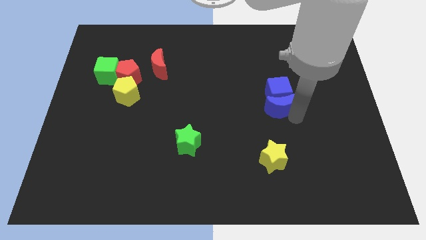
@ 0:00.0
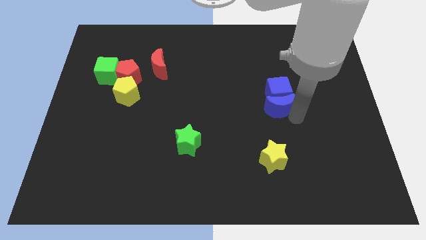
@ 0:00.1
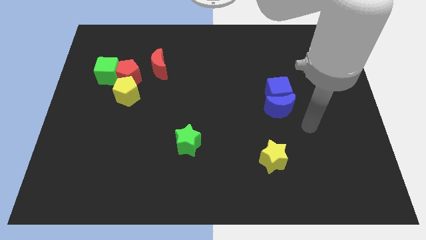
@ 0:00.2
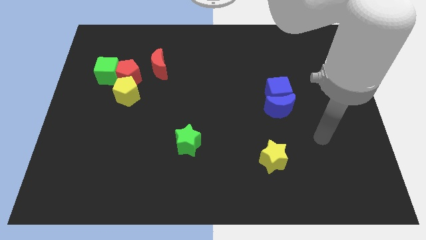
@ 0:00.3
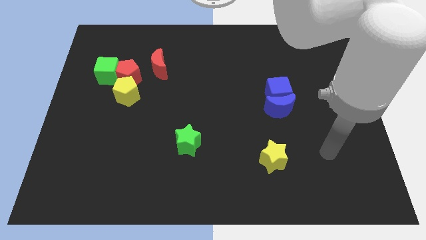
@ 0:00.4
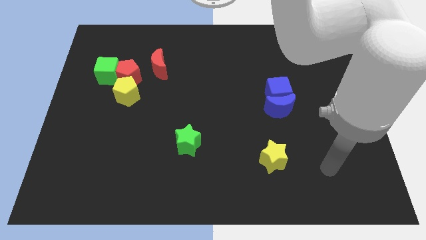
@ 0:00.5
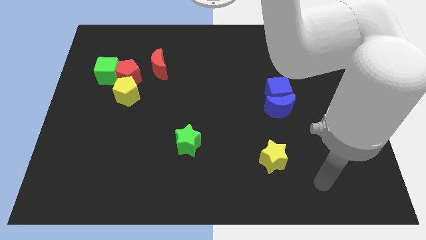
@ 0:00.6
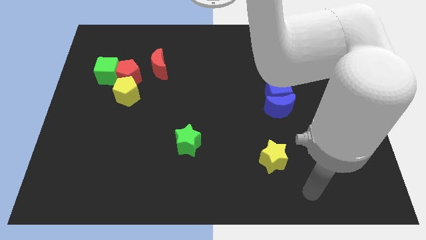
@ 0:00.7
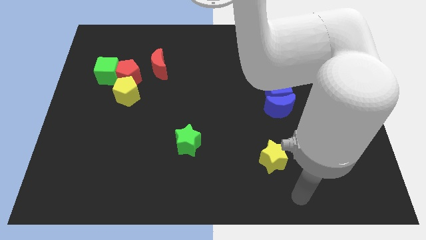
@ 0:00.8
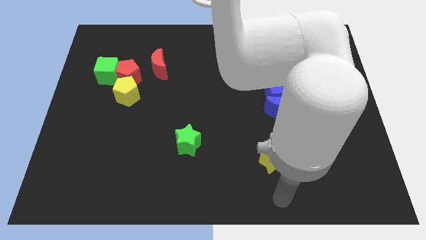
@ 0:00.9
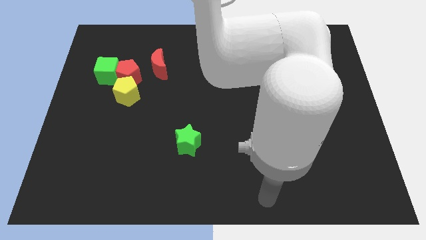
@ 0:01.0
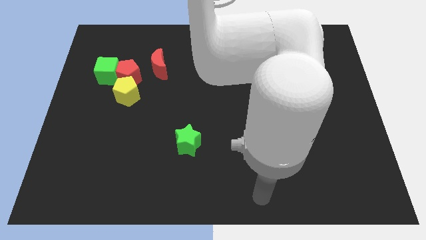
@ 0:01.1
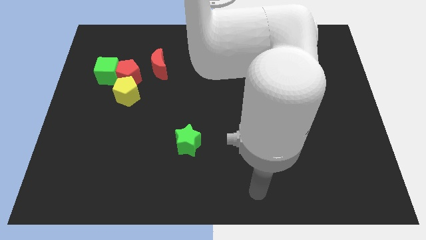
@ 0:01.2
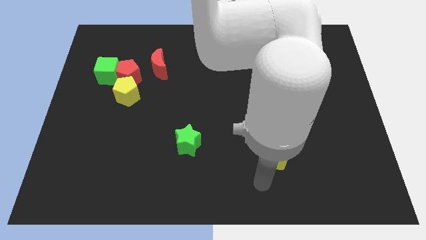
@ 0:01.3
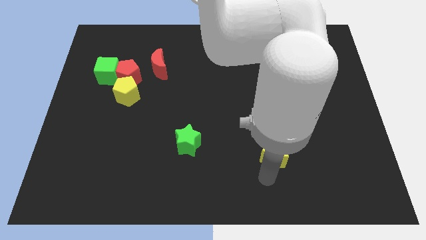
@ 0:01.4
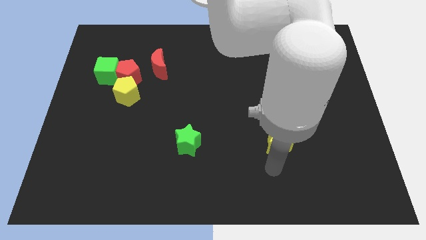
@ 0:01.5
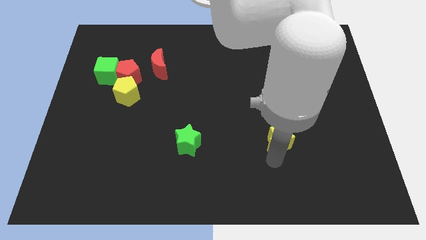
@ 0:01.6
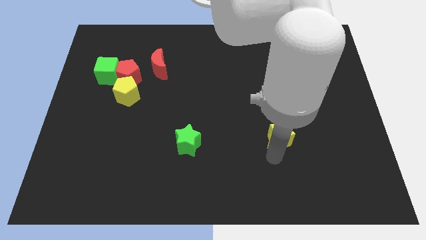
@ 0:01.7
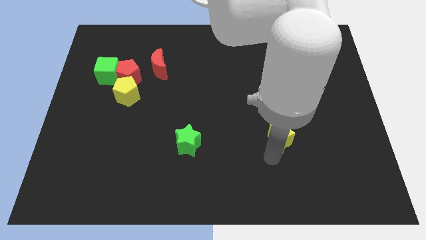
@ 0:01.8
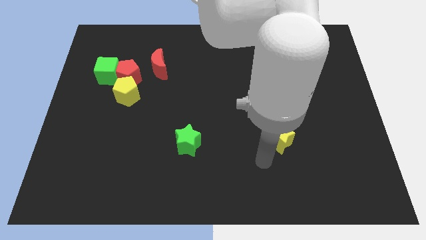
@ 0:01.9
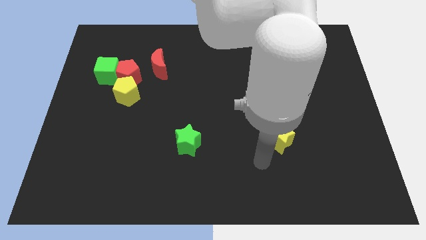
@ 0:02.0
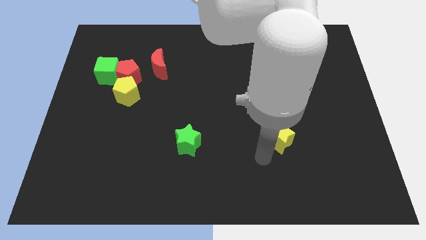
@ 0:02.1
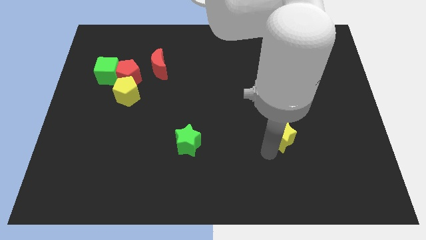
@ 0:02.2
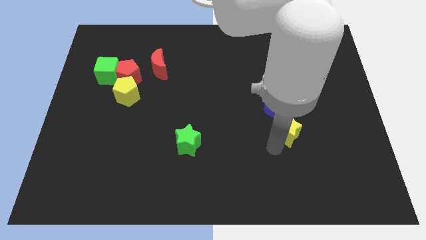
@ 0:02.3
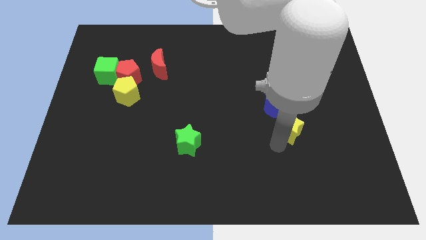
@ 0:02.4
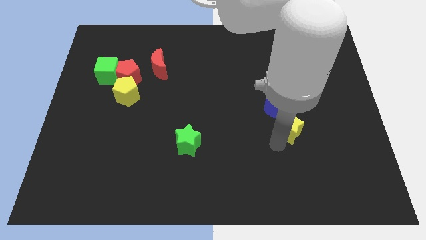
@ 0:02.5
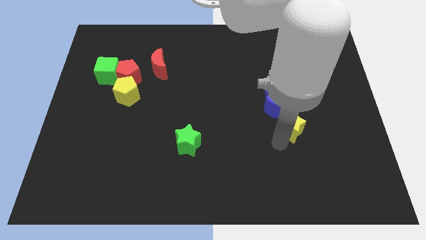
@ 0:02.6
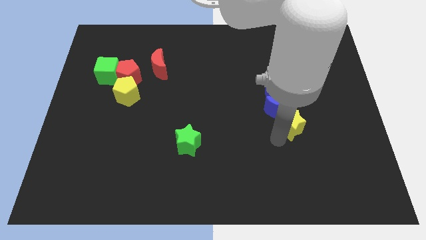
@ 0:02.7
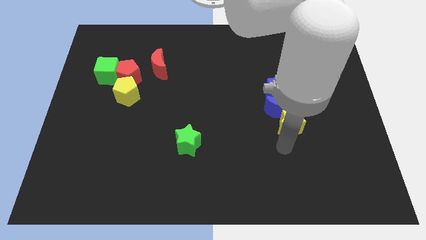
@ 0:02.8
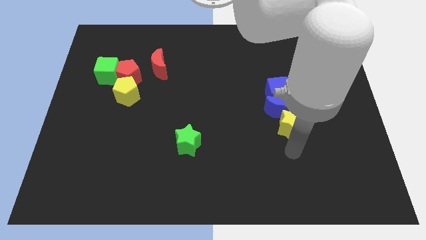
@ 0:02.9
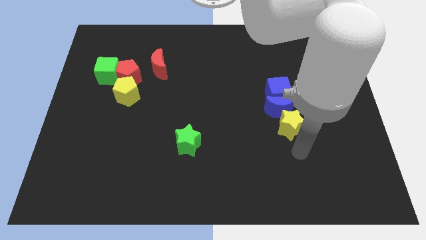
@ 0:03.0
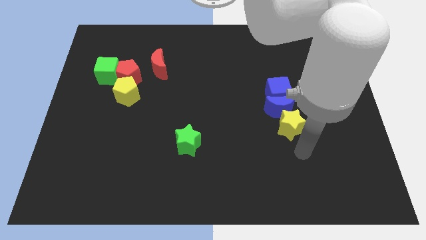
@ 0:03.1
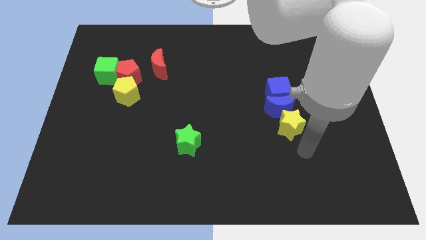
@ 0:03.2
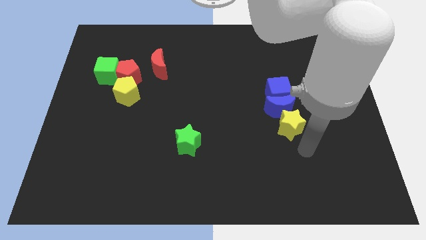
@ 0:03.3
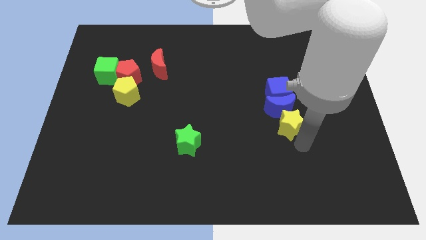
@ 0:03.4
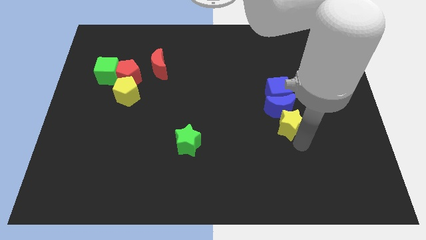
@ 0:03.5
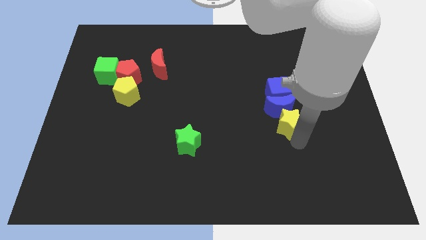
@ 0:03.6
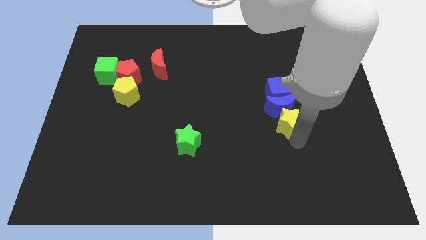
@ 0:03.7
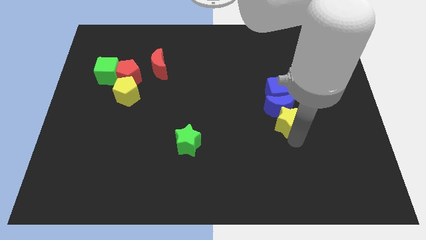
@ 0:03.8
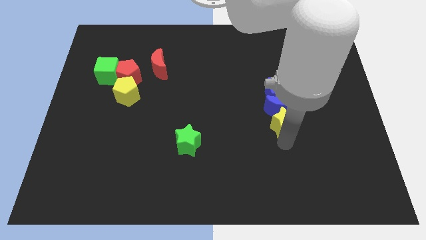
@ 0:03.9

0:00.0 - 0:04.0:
push the yellow star into the bottom side of the blue moon

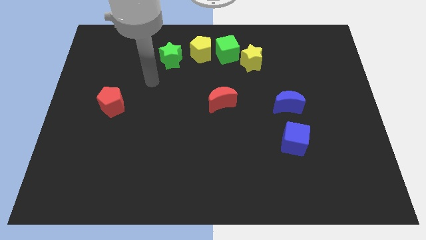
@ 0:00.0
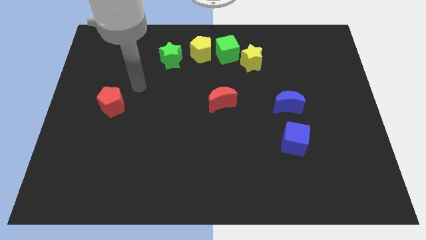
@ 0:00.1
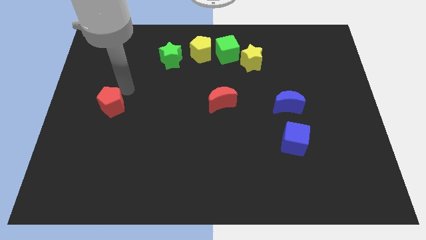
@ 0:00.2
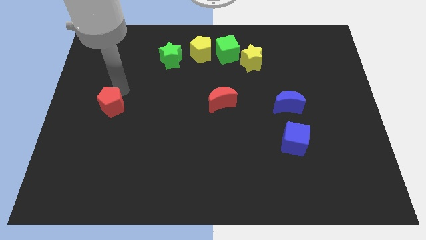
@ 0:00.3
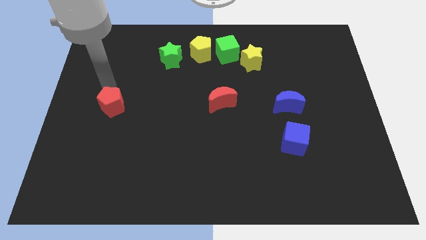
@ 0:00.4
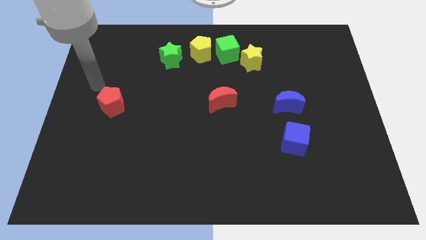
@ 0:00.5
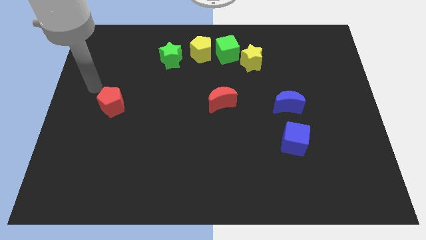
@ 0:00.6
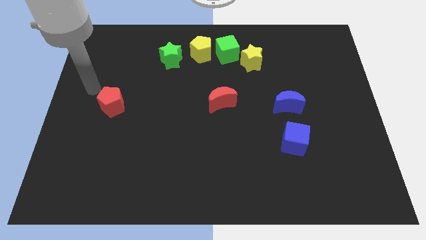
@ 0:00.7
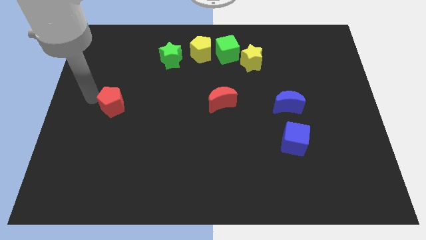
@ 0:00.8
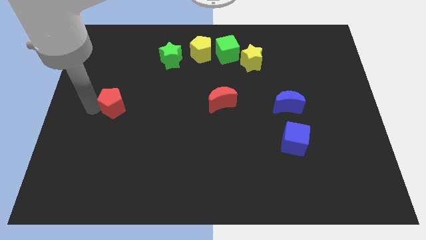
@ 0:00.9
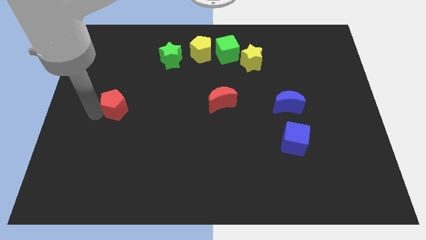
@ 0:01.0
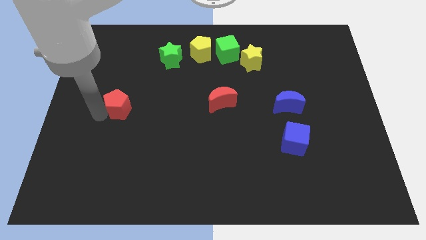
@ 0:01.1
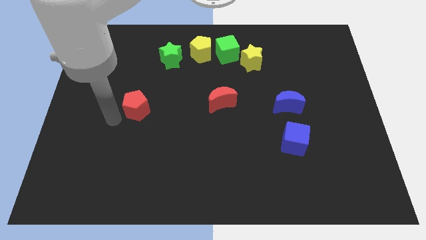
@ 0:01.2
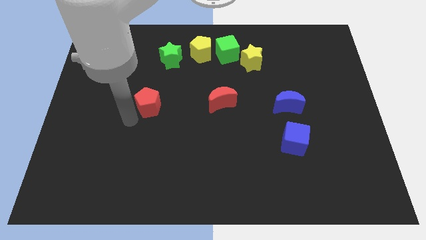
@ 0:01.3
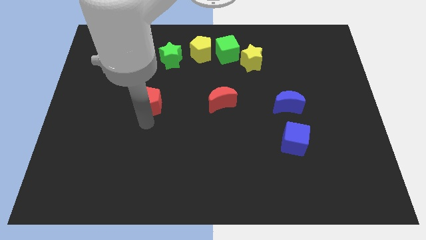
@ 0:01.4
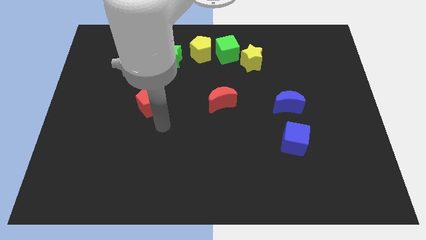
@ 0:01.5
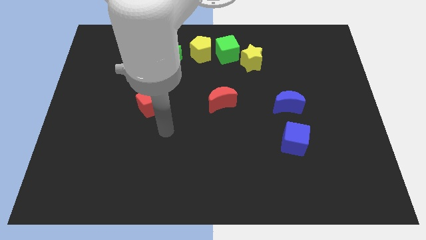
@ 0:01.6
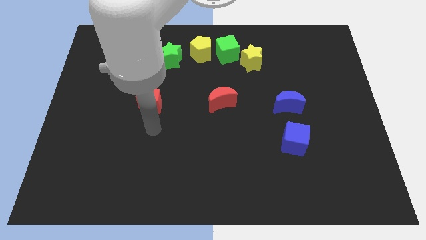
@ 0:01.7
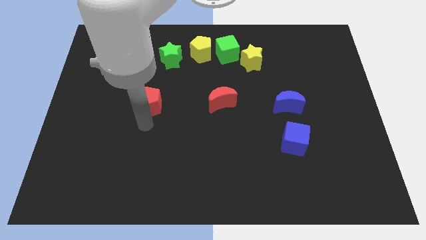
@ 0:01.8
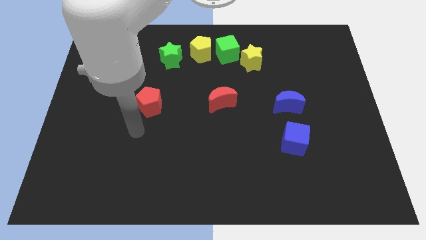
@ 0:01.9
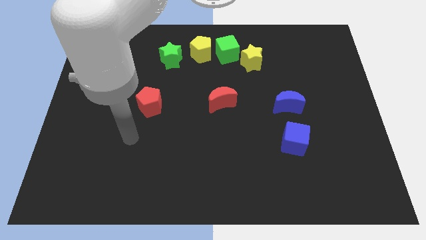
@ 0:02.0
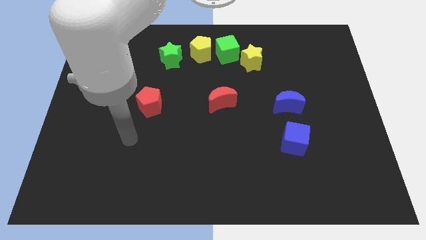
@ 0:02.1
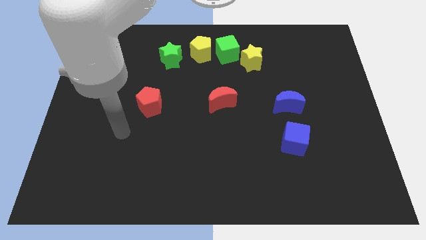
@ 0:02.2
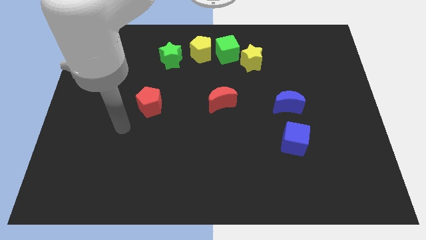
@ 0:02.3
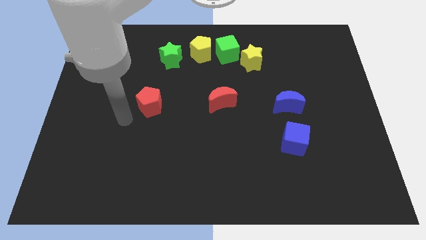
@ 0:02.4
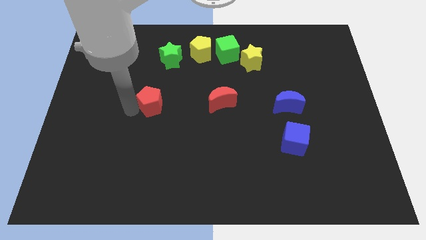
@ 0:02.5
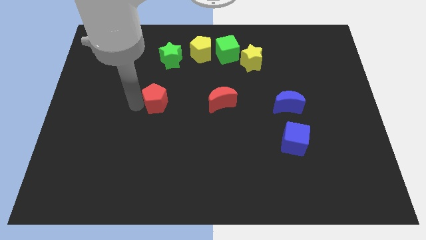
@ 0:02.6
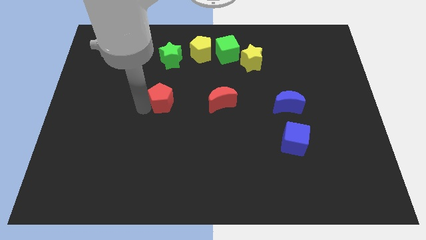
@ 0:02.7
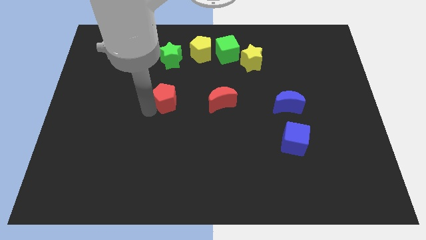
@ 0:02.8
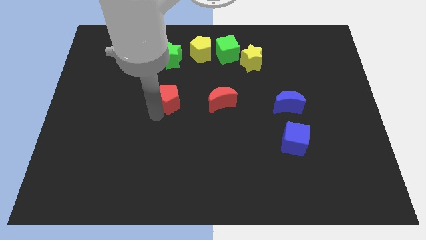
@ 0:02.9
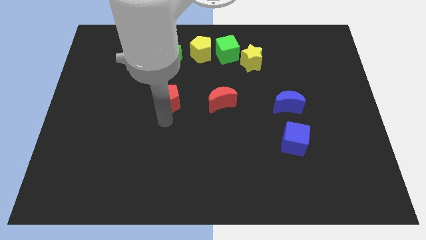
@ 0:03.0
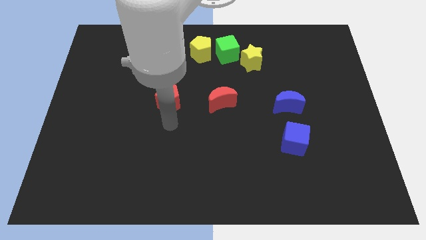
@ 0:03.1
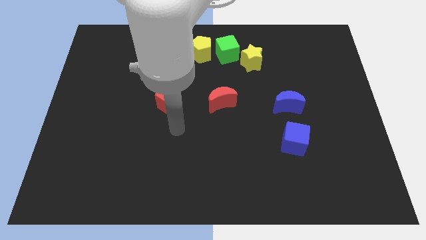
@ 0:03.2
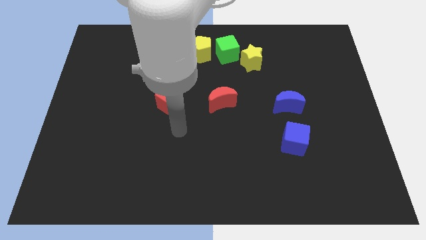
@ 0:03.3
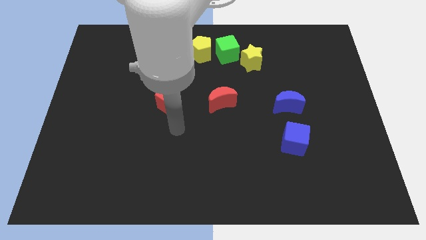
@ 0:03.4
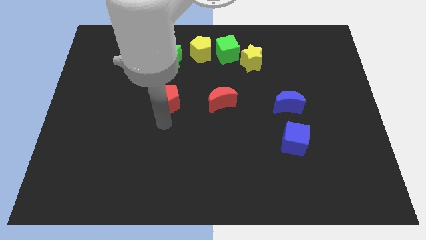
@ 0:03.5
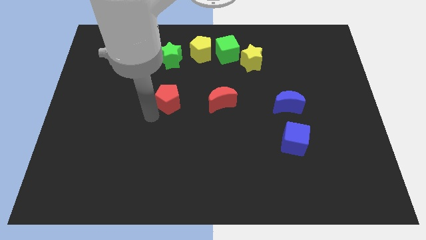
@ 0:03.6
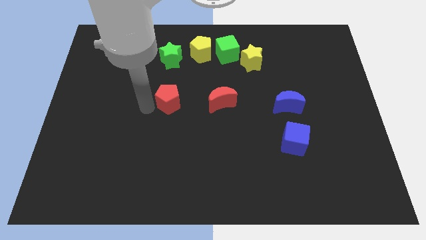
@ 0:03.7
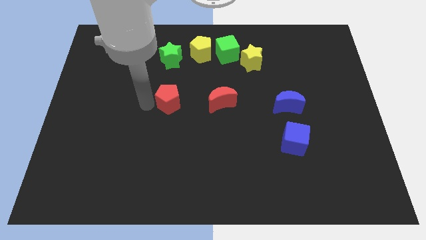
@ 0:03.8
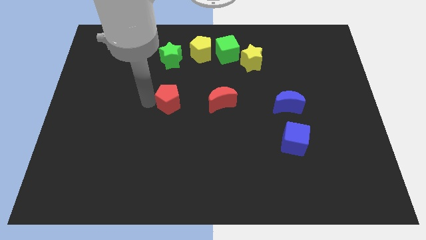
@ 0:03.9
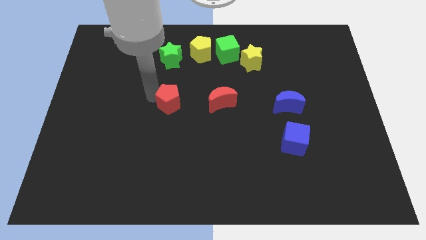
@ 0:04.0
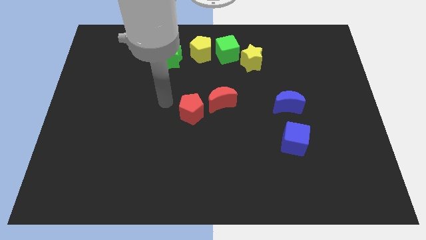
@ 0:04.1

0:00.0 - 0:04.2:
move the red pentagon to the left of the red crescent

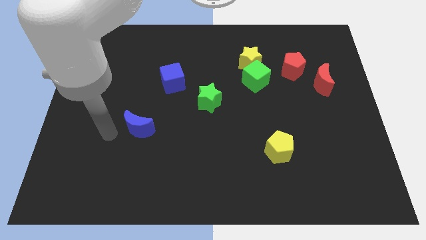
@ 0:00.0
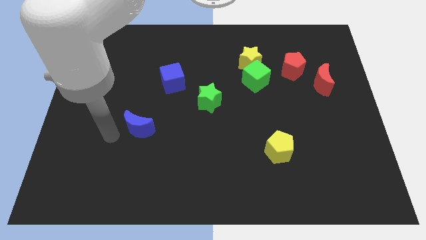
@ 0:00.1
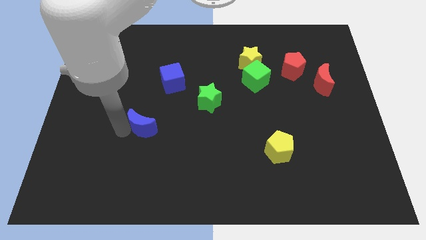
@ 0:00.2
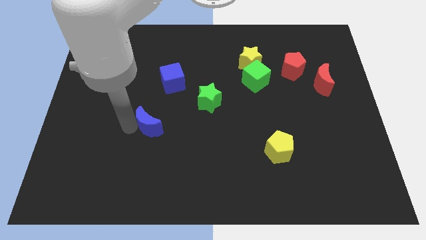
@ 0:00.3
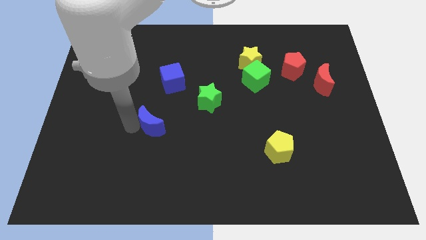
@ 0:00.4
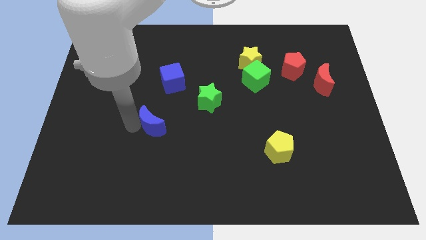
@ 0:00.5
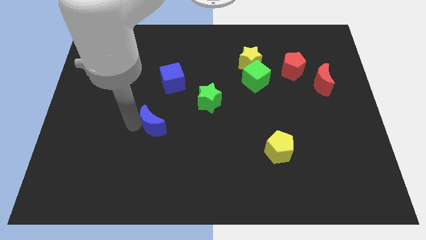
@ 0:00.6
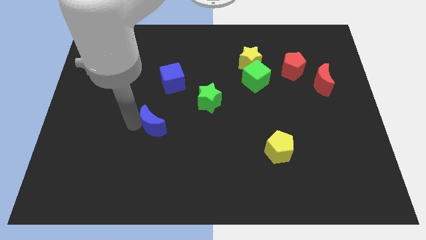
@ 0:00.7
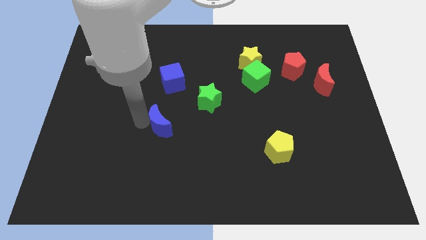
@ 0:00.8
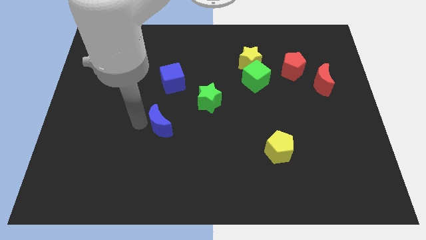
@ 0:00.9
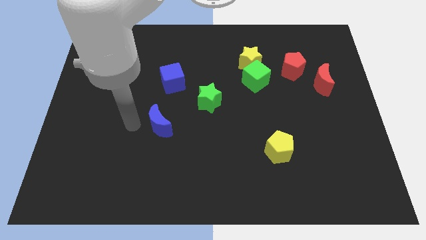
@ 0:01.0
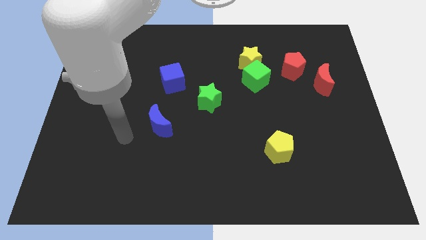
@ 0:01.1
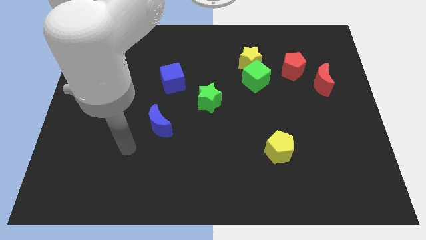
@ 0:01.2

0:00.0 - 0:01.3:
move blue moon below the blue cube
